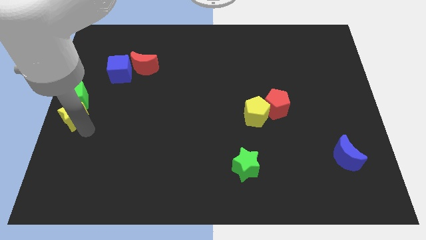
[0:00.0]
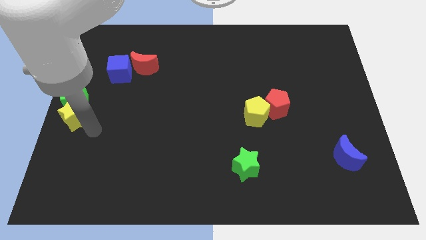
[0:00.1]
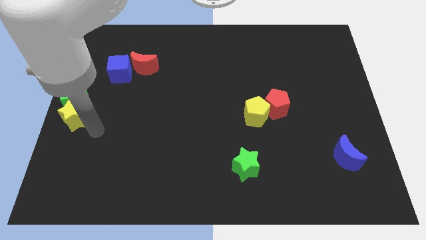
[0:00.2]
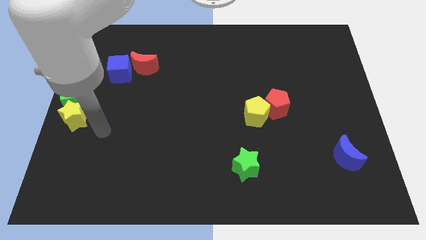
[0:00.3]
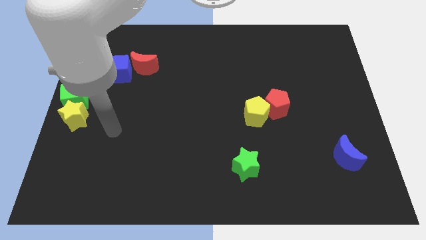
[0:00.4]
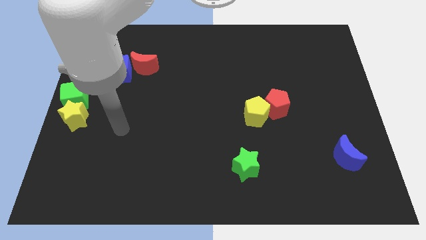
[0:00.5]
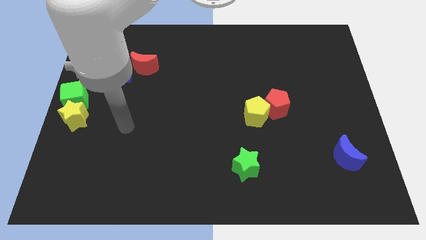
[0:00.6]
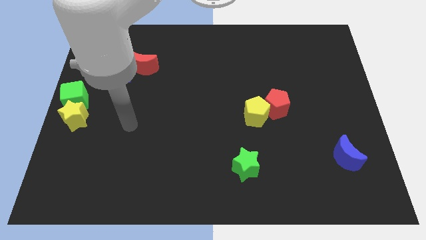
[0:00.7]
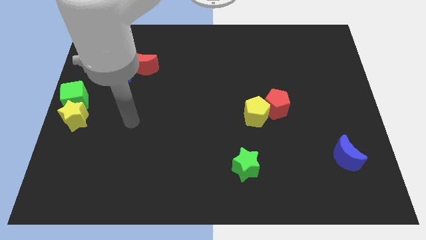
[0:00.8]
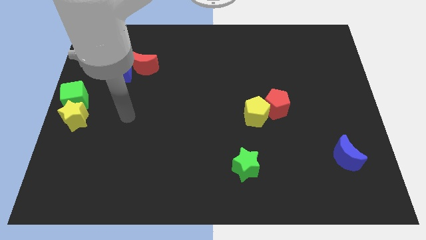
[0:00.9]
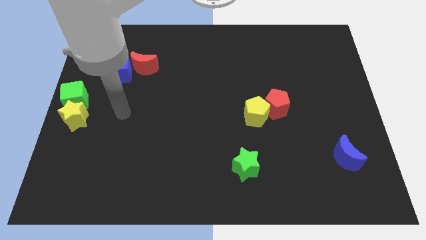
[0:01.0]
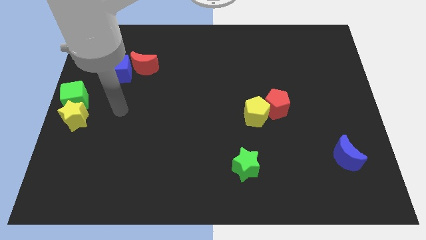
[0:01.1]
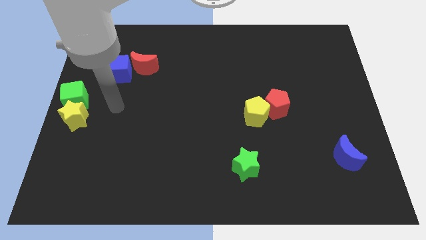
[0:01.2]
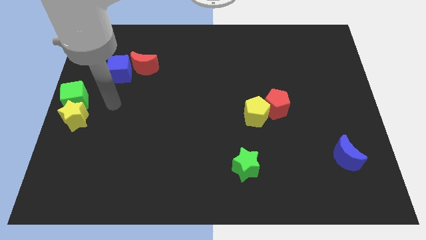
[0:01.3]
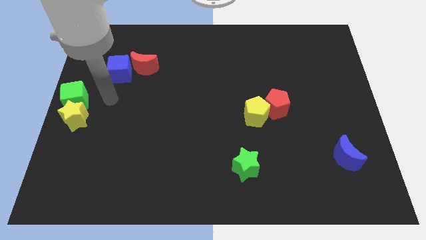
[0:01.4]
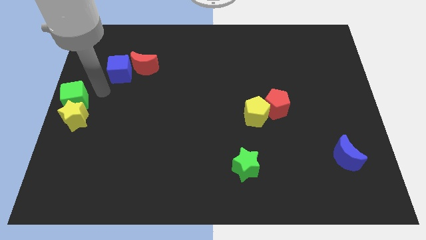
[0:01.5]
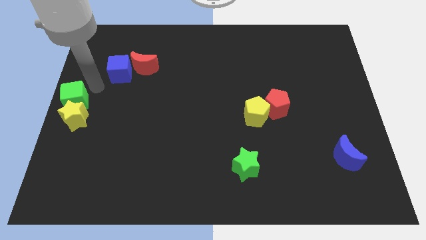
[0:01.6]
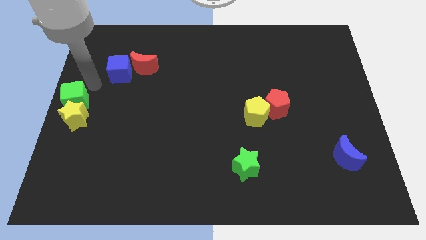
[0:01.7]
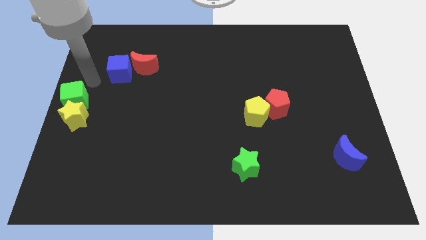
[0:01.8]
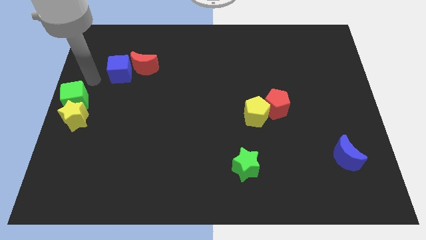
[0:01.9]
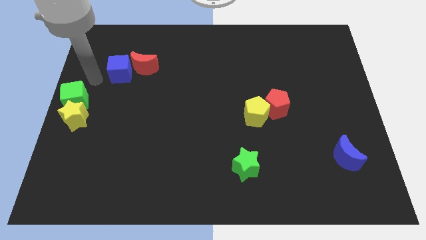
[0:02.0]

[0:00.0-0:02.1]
point your arm between the cubes

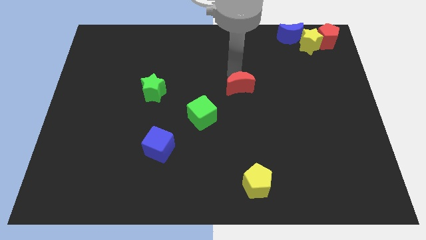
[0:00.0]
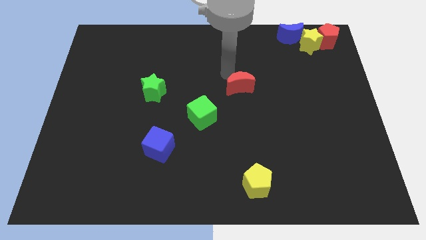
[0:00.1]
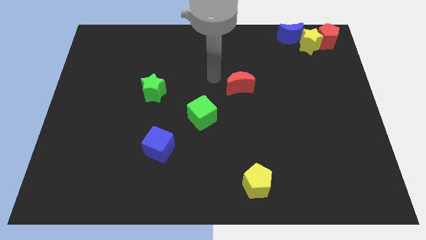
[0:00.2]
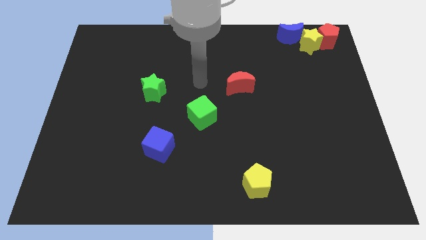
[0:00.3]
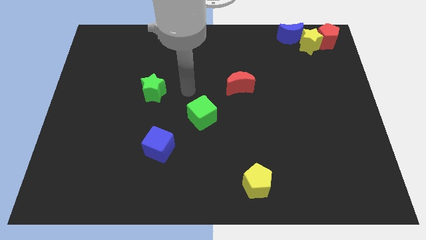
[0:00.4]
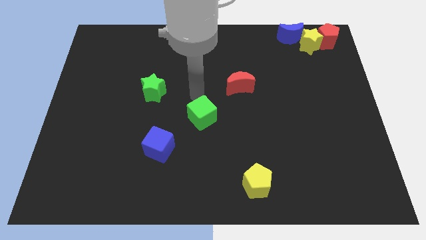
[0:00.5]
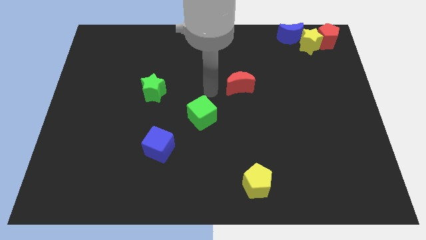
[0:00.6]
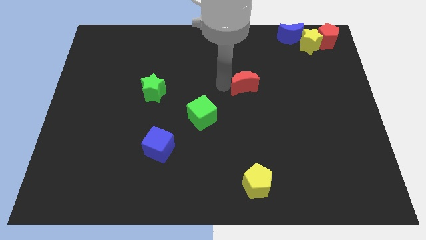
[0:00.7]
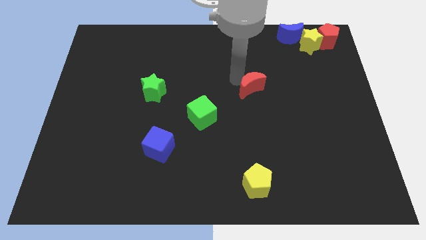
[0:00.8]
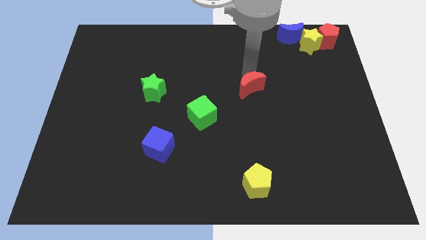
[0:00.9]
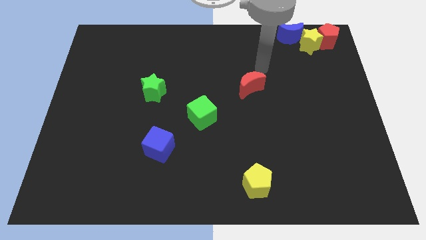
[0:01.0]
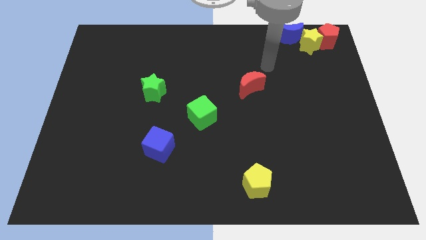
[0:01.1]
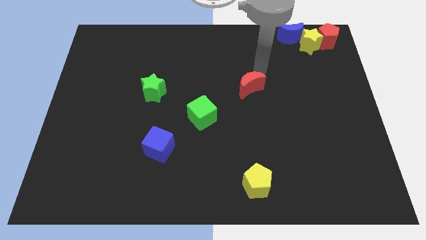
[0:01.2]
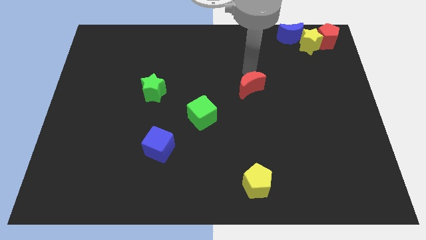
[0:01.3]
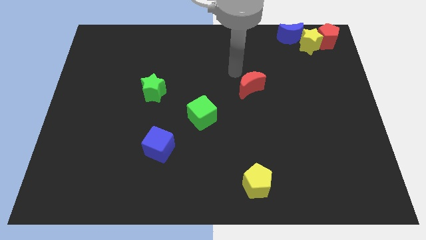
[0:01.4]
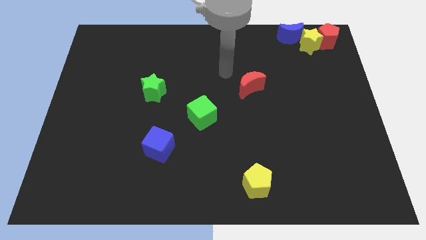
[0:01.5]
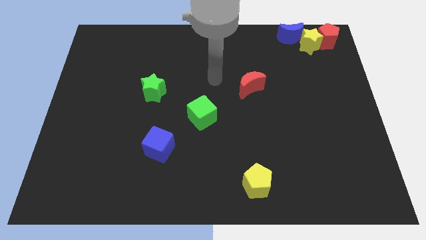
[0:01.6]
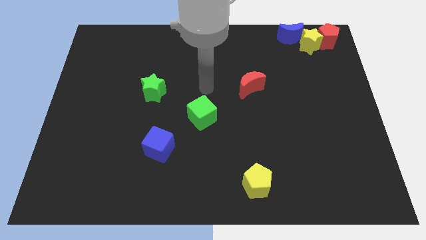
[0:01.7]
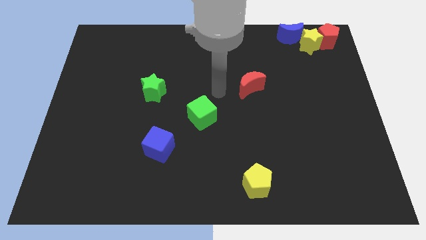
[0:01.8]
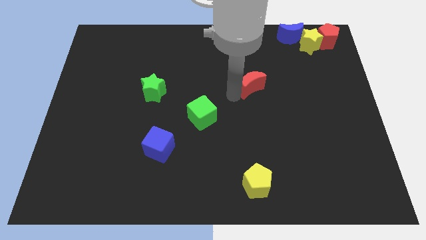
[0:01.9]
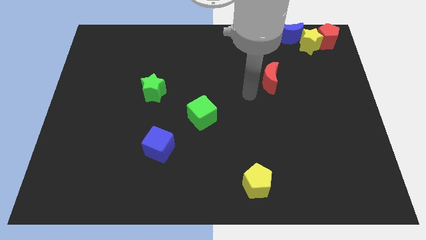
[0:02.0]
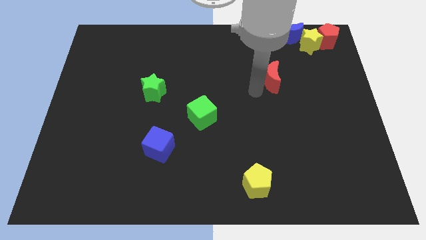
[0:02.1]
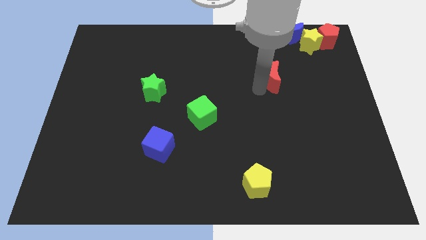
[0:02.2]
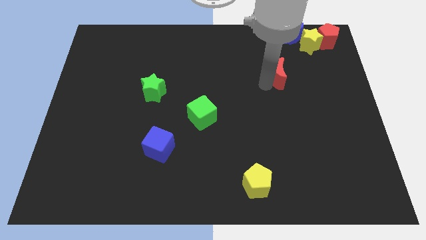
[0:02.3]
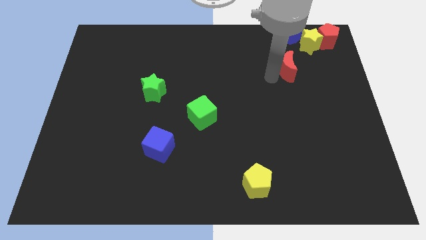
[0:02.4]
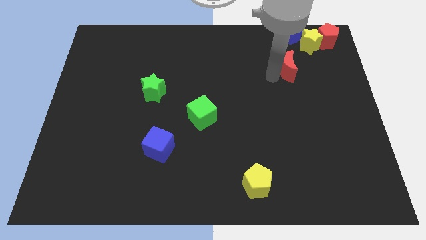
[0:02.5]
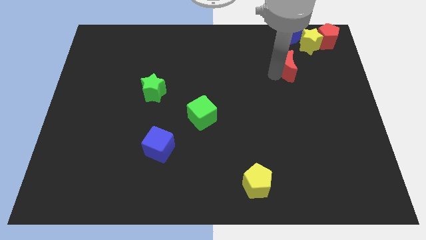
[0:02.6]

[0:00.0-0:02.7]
push red crescent below blue crescent

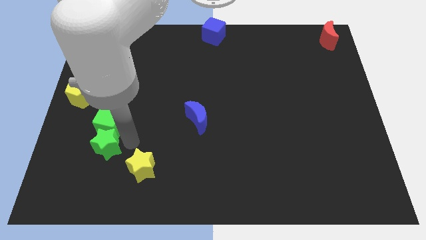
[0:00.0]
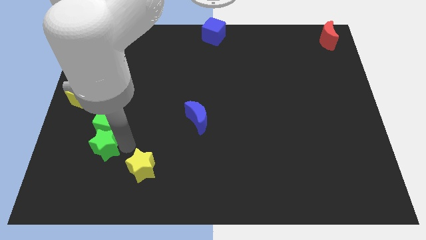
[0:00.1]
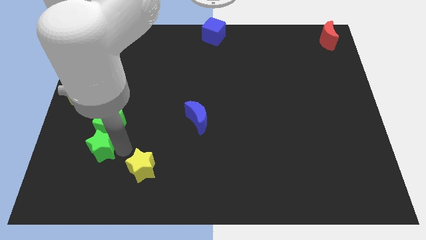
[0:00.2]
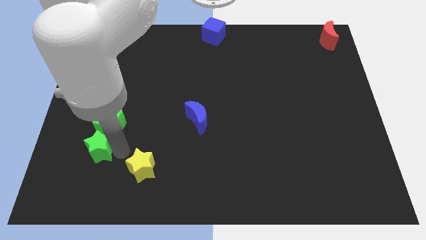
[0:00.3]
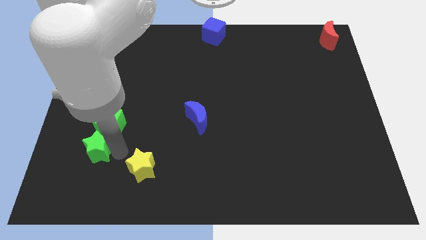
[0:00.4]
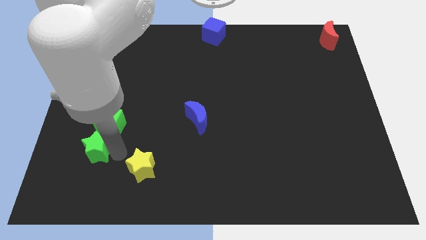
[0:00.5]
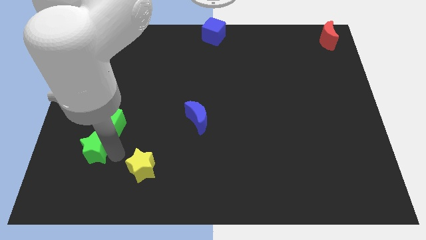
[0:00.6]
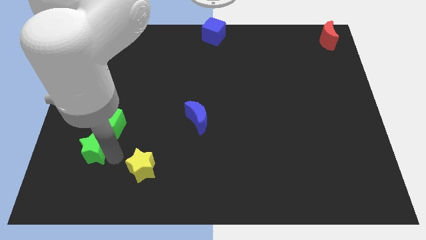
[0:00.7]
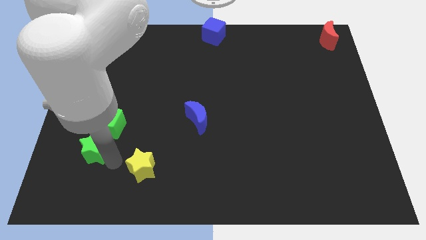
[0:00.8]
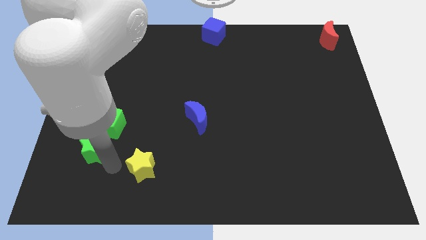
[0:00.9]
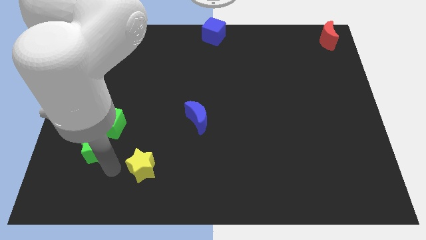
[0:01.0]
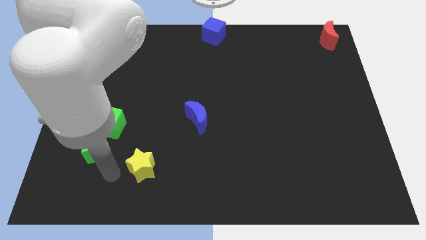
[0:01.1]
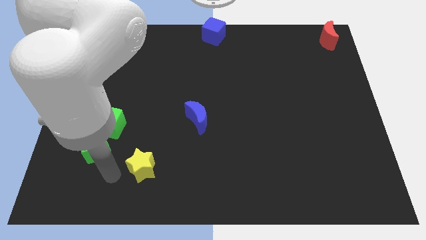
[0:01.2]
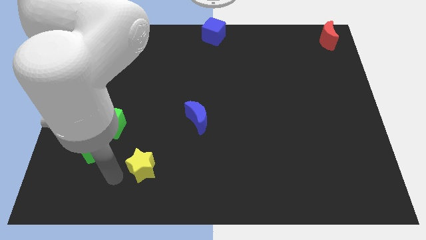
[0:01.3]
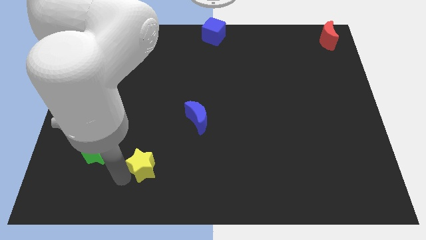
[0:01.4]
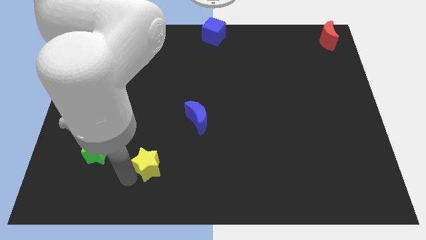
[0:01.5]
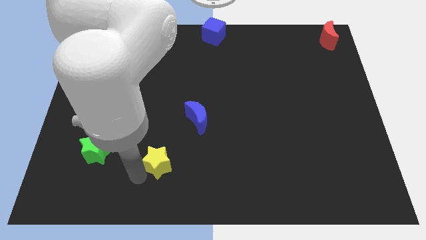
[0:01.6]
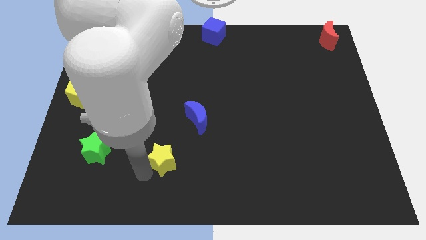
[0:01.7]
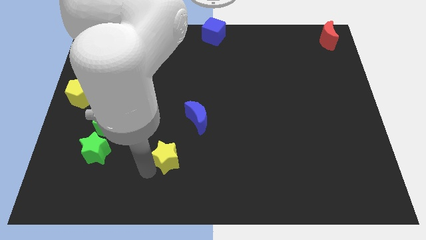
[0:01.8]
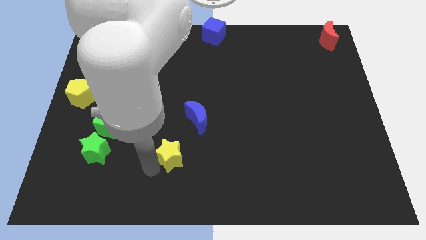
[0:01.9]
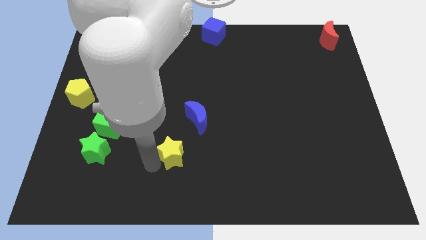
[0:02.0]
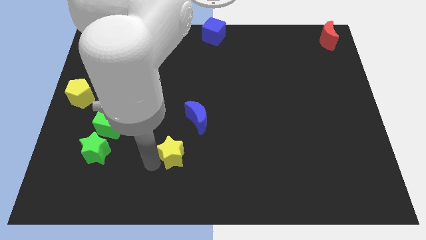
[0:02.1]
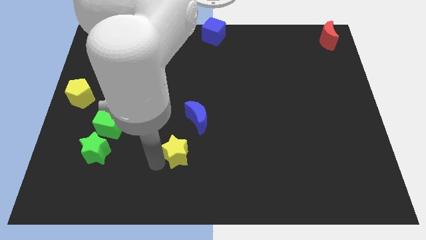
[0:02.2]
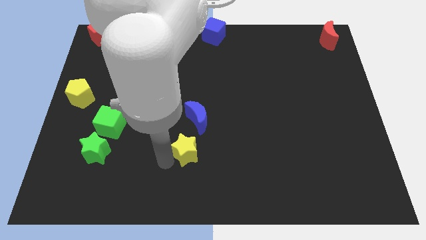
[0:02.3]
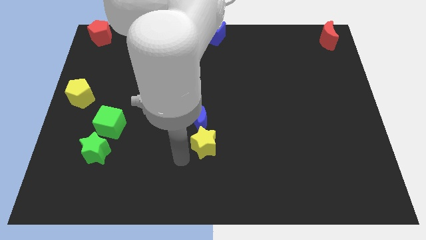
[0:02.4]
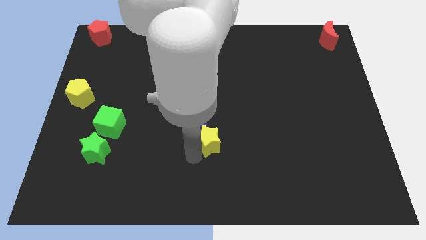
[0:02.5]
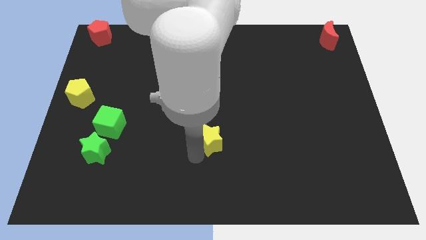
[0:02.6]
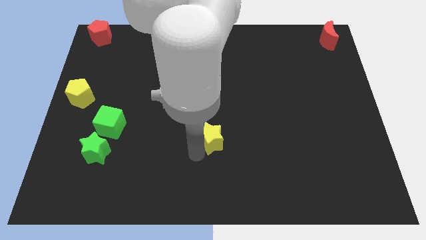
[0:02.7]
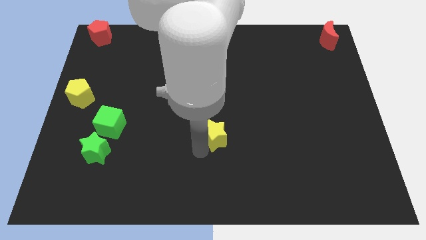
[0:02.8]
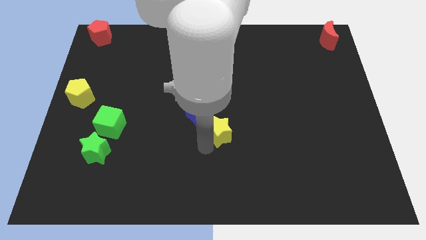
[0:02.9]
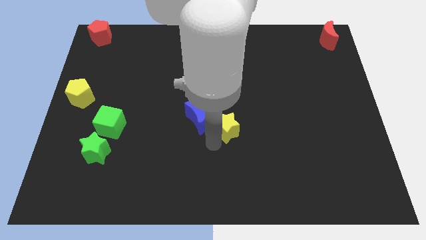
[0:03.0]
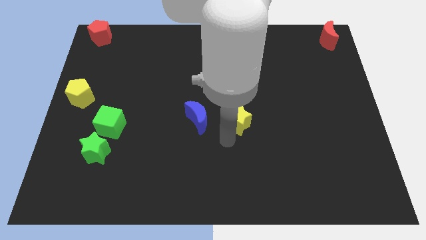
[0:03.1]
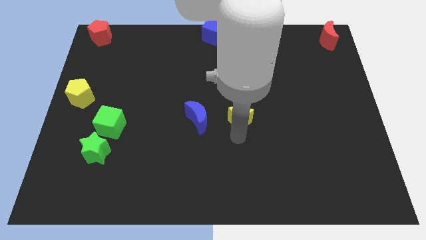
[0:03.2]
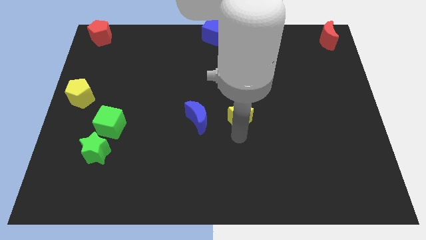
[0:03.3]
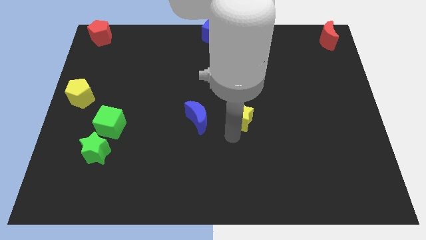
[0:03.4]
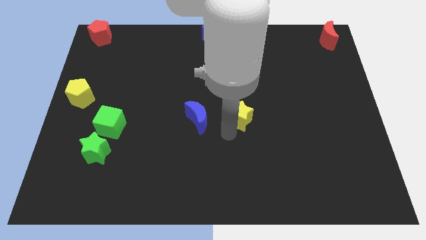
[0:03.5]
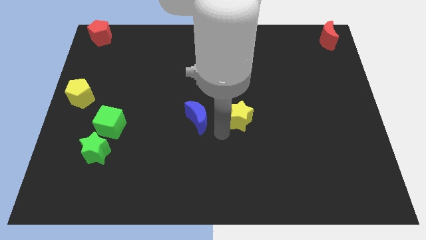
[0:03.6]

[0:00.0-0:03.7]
move the yellow block to the right of the blue moon

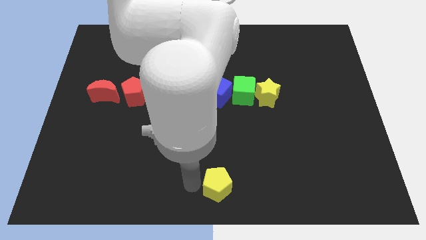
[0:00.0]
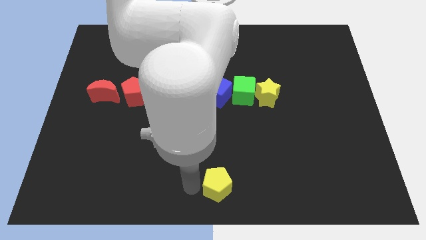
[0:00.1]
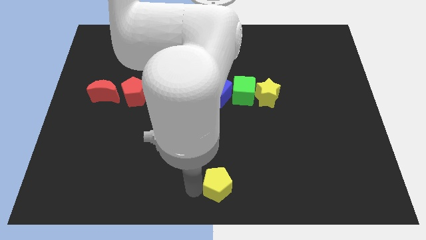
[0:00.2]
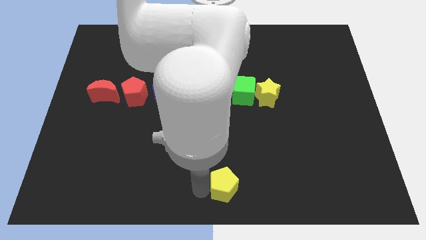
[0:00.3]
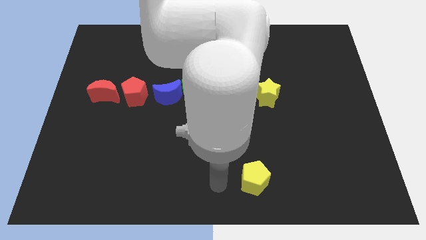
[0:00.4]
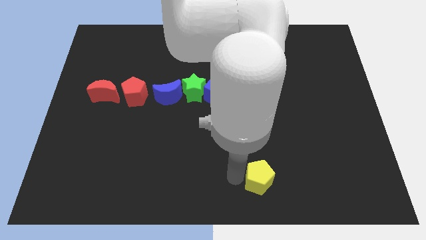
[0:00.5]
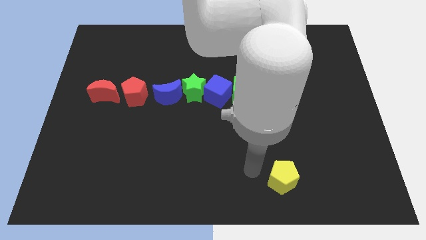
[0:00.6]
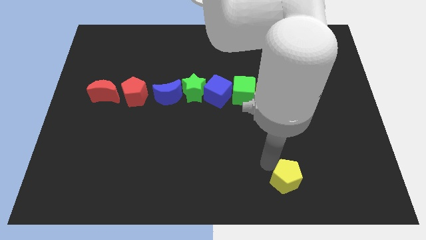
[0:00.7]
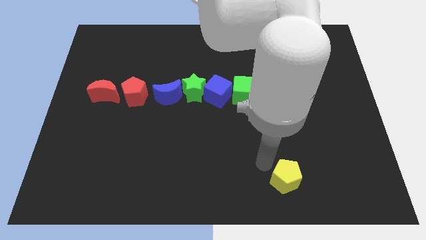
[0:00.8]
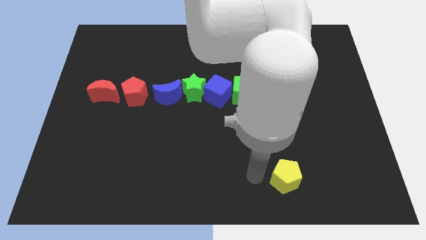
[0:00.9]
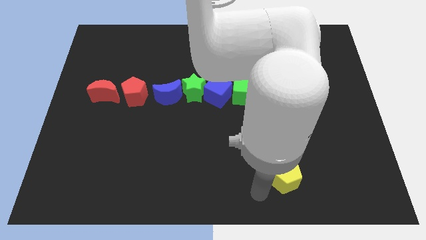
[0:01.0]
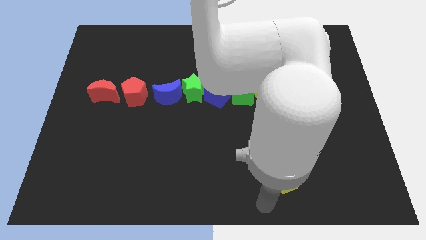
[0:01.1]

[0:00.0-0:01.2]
slightly move yellow pentagon towards the right
